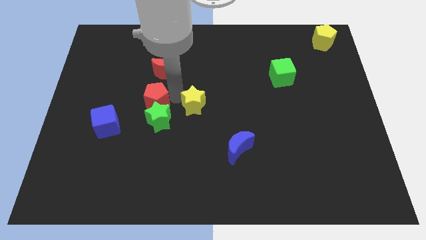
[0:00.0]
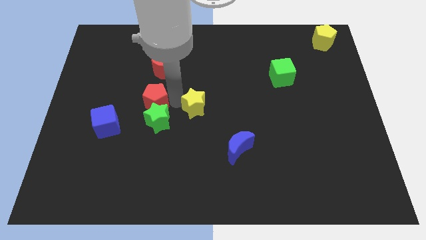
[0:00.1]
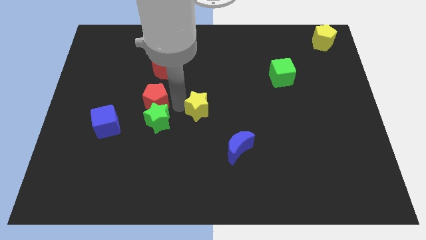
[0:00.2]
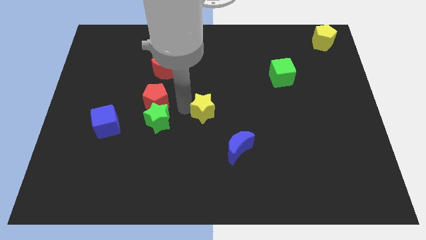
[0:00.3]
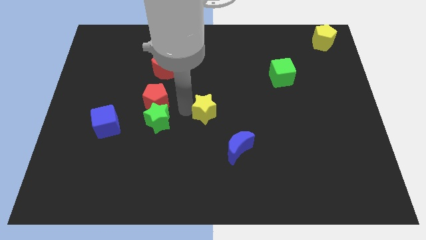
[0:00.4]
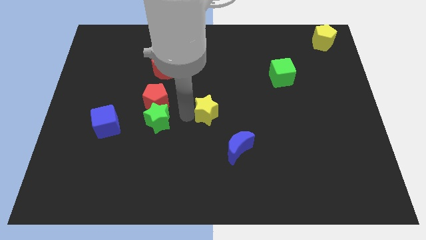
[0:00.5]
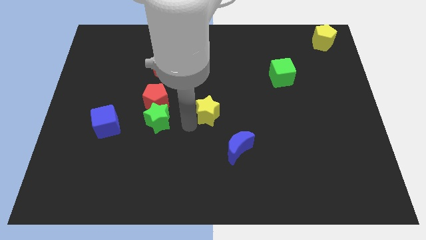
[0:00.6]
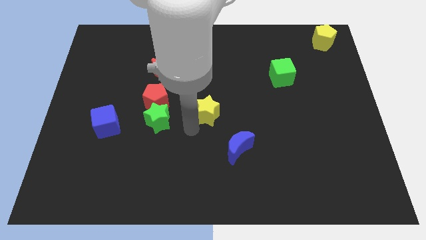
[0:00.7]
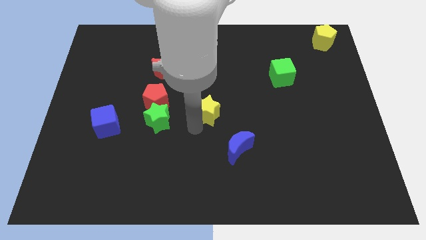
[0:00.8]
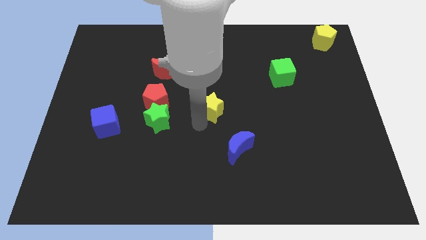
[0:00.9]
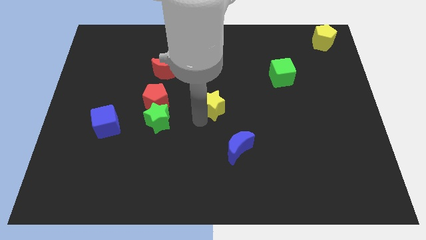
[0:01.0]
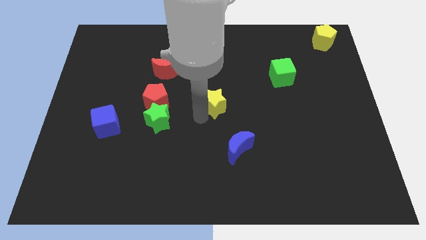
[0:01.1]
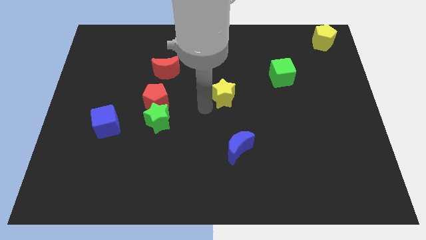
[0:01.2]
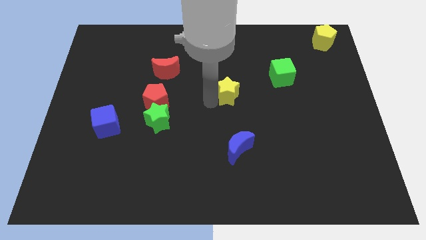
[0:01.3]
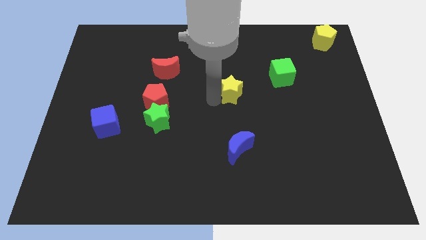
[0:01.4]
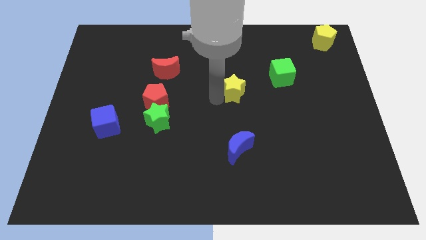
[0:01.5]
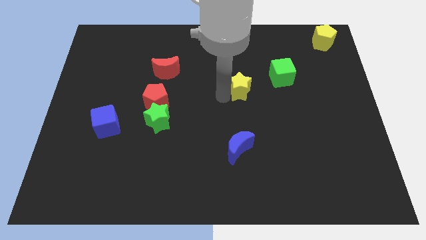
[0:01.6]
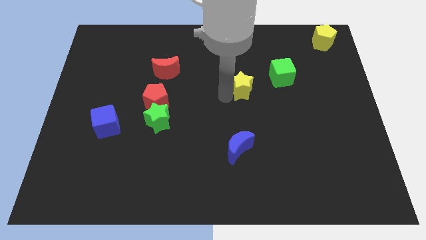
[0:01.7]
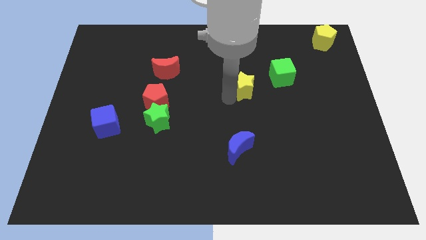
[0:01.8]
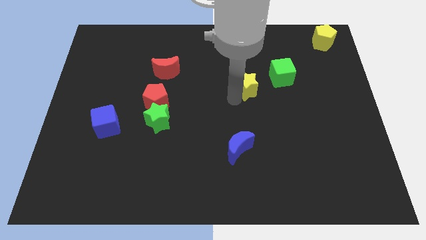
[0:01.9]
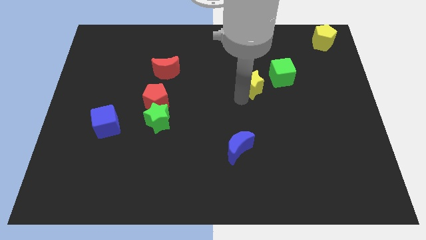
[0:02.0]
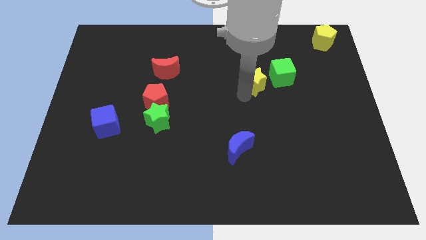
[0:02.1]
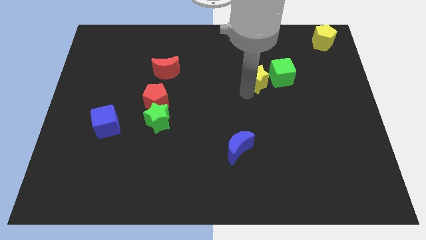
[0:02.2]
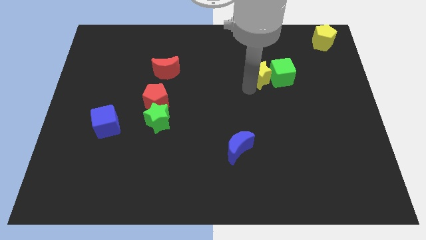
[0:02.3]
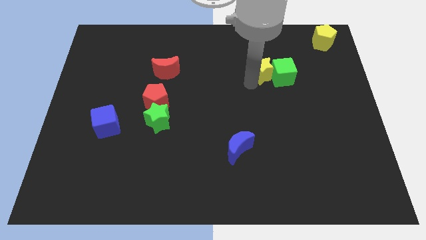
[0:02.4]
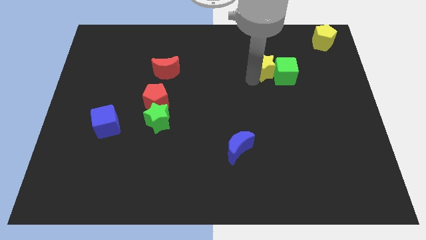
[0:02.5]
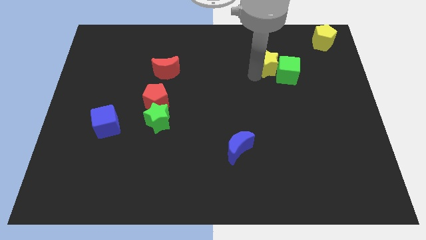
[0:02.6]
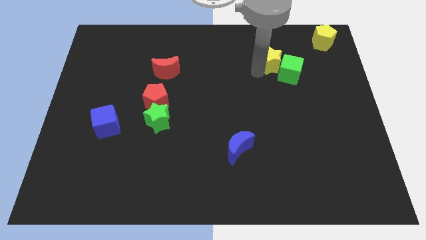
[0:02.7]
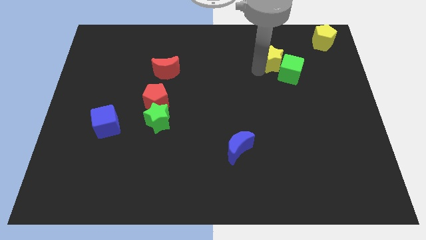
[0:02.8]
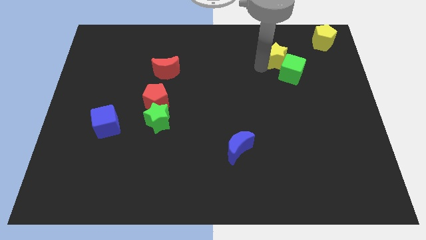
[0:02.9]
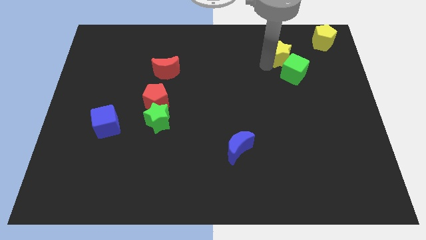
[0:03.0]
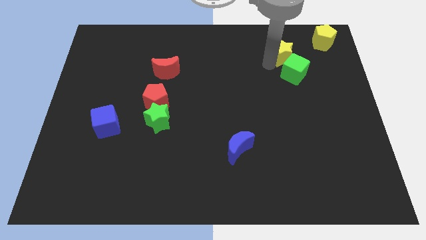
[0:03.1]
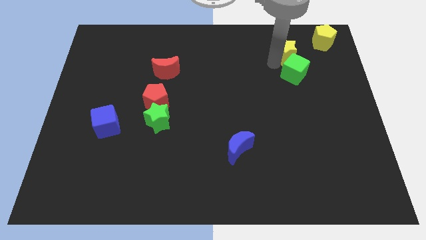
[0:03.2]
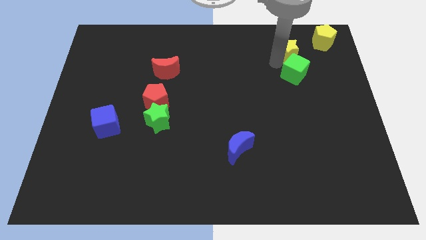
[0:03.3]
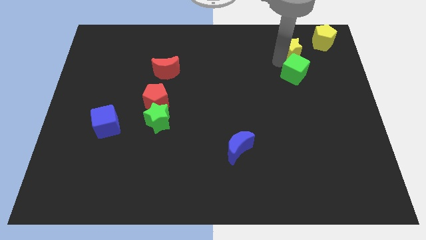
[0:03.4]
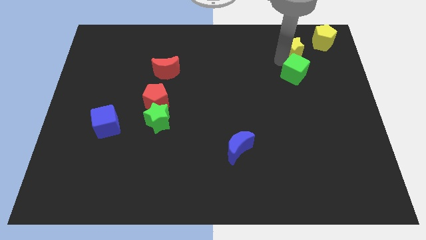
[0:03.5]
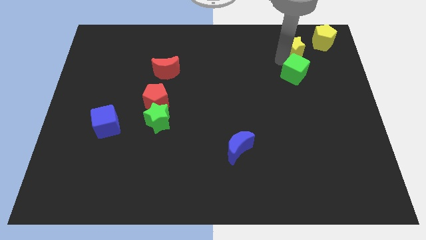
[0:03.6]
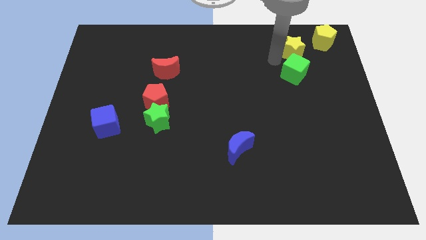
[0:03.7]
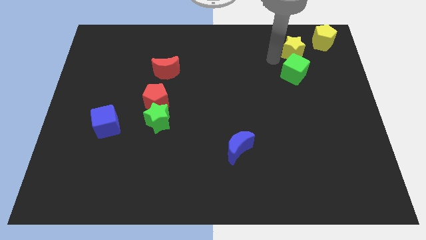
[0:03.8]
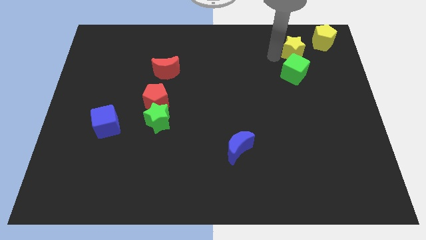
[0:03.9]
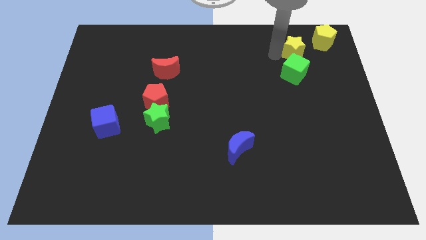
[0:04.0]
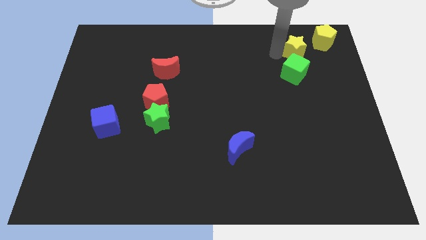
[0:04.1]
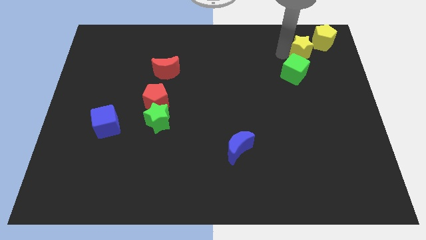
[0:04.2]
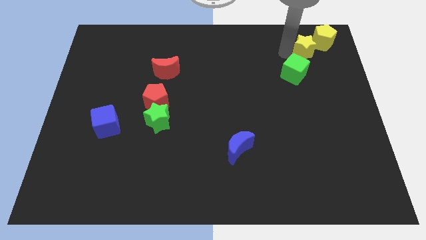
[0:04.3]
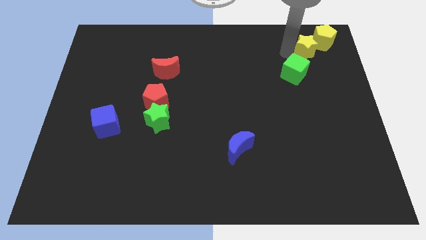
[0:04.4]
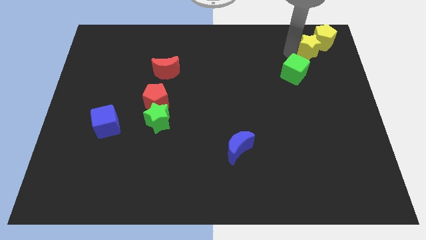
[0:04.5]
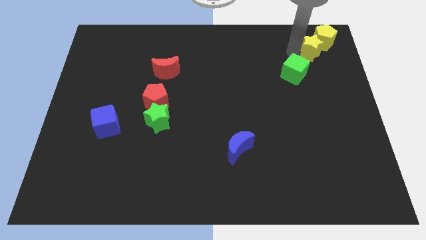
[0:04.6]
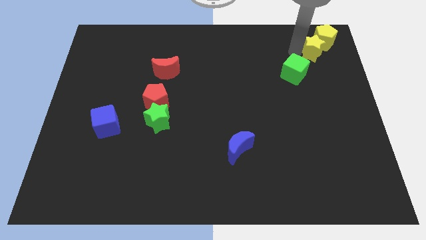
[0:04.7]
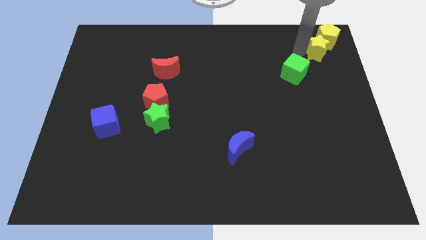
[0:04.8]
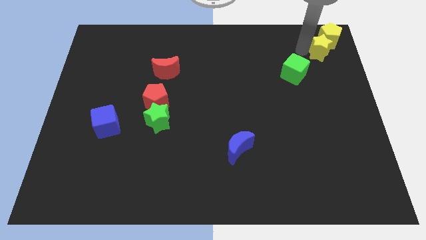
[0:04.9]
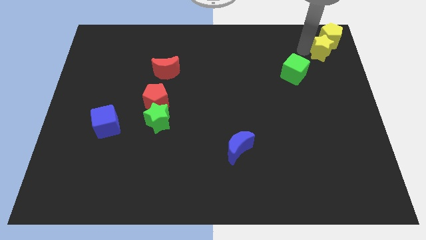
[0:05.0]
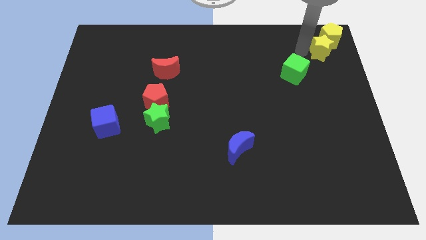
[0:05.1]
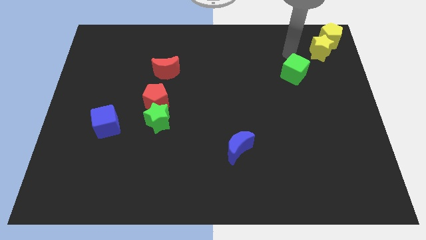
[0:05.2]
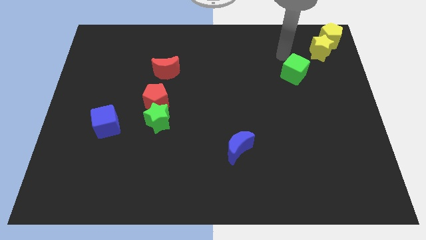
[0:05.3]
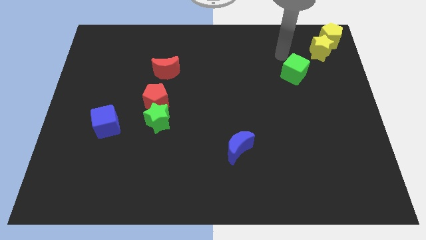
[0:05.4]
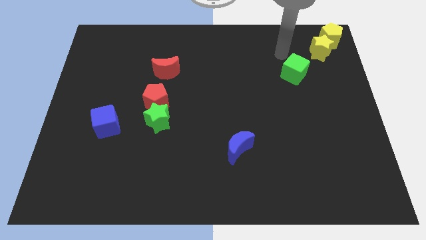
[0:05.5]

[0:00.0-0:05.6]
push the yellow star into the yellow pentagon

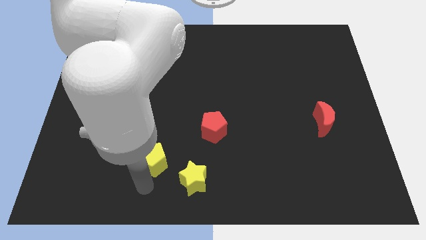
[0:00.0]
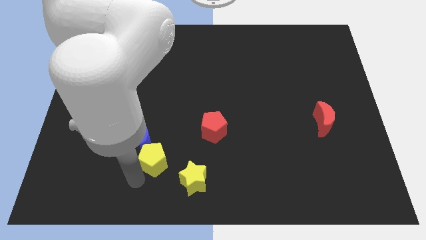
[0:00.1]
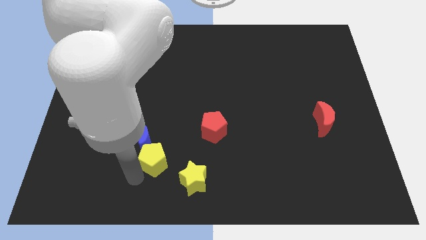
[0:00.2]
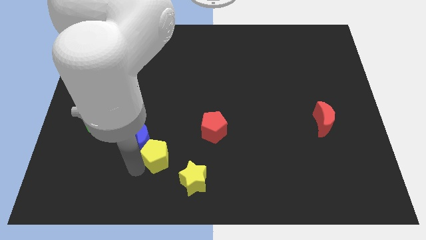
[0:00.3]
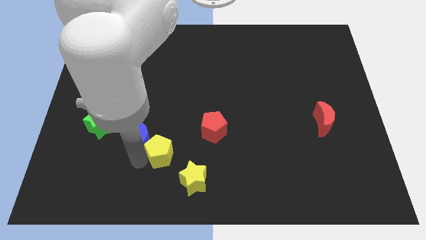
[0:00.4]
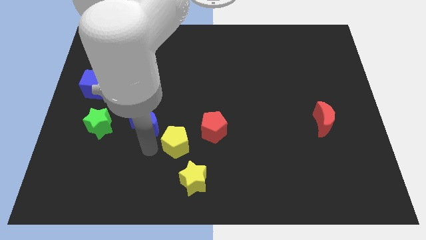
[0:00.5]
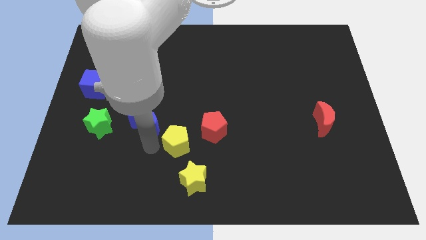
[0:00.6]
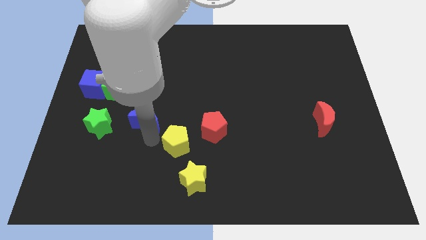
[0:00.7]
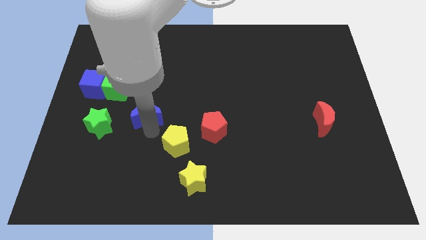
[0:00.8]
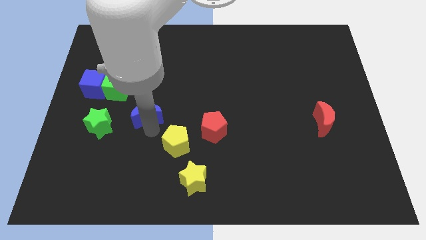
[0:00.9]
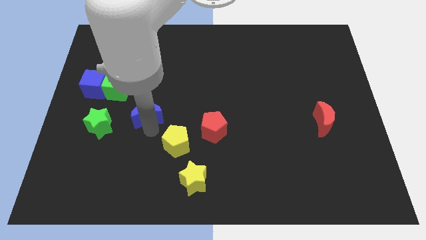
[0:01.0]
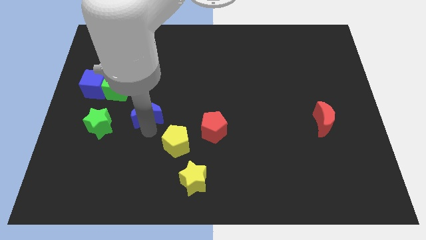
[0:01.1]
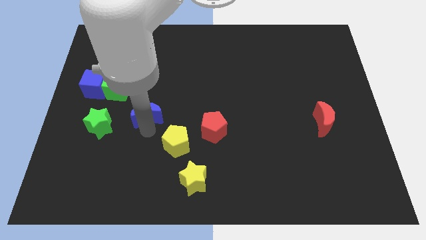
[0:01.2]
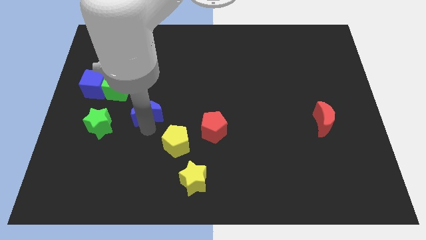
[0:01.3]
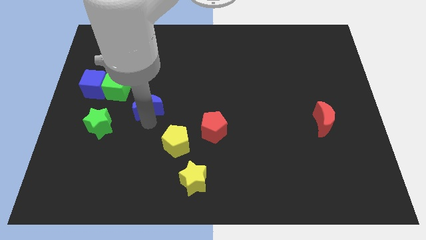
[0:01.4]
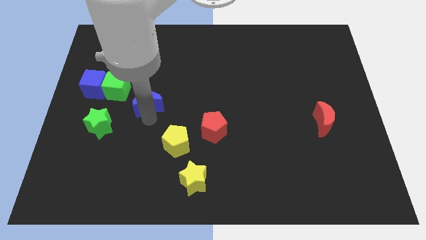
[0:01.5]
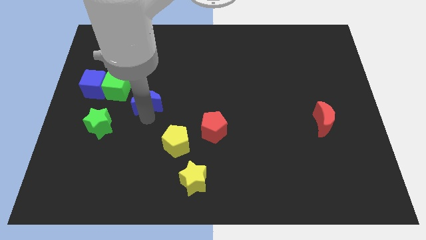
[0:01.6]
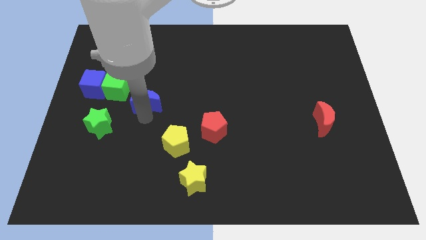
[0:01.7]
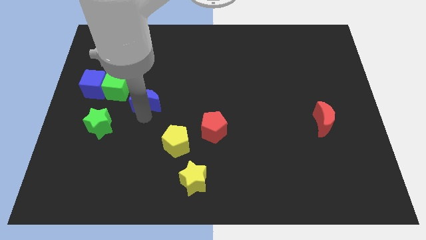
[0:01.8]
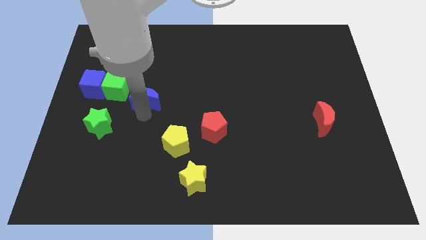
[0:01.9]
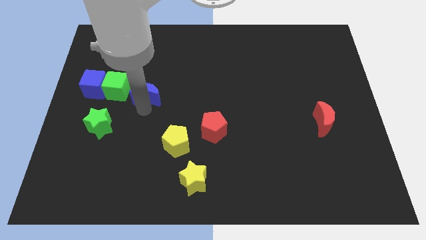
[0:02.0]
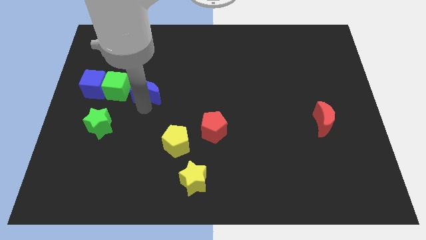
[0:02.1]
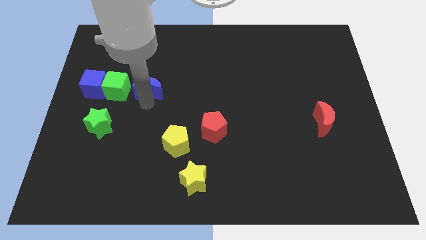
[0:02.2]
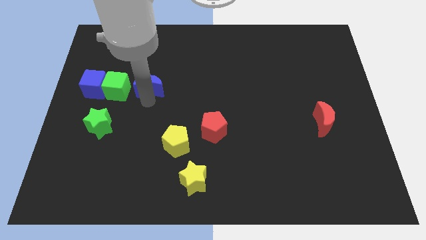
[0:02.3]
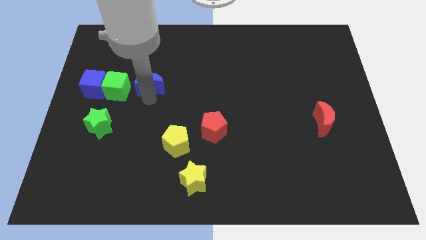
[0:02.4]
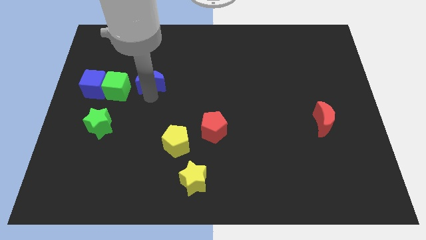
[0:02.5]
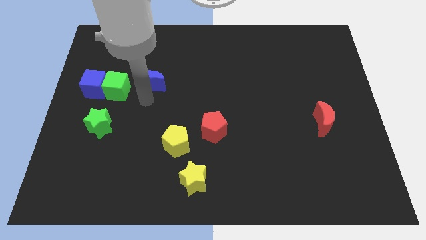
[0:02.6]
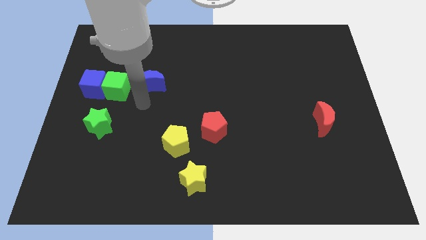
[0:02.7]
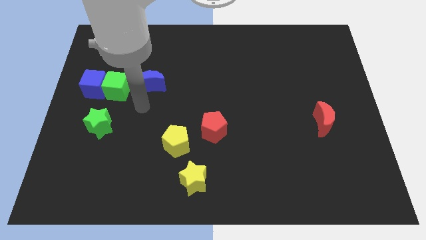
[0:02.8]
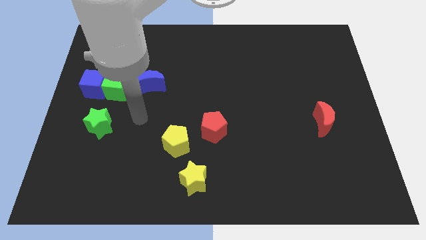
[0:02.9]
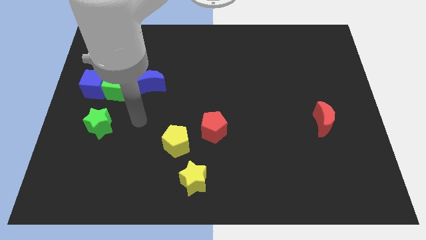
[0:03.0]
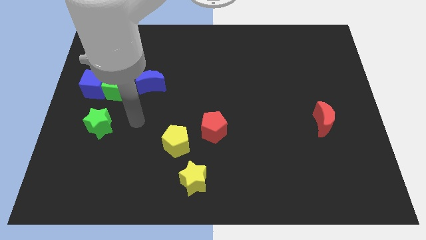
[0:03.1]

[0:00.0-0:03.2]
place the blue crescent right to the green cube

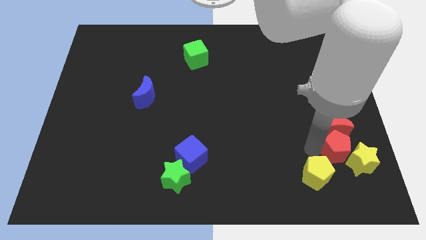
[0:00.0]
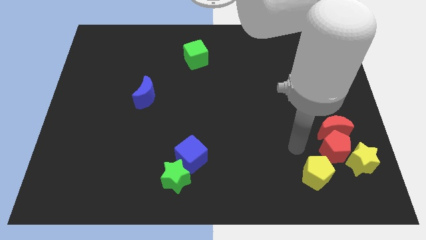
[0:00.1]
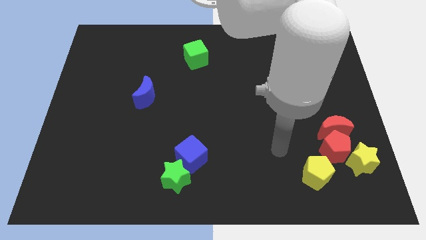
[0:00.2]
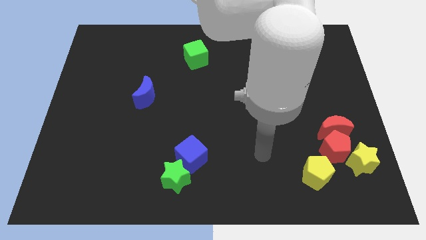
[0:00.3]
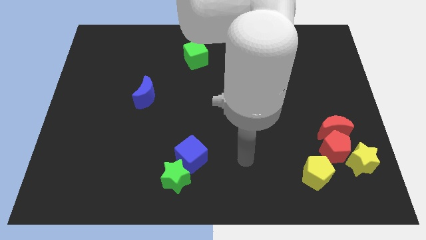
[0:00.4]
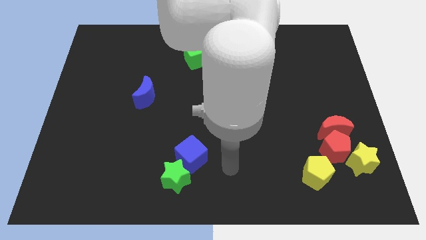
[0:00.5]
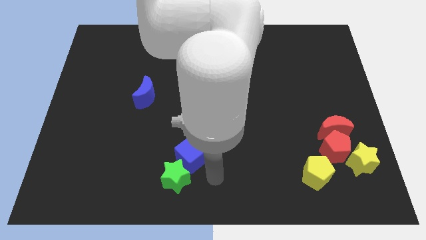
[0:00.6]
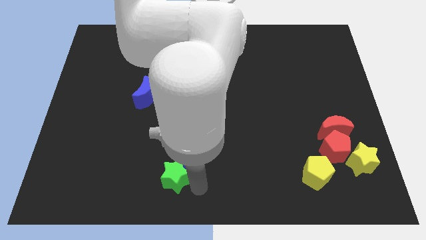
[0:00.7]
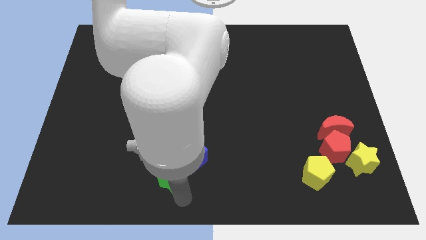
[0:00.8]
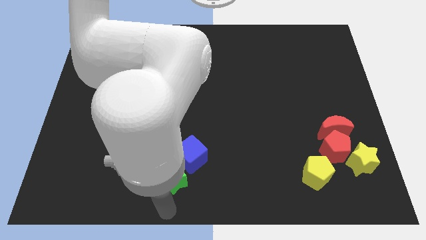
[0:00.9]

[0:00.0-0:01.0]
point your arm at the bottom of the green star
